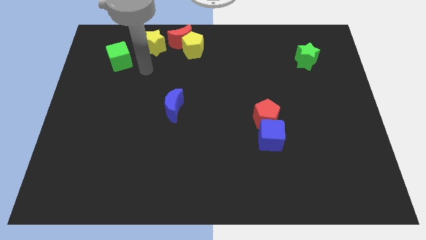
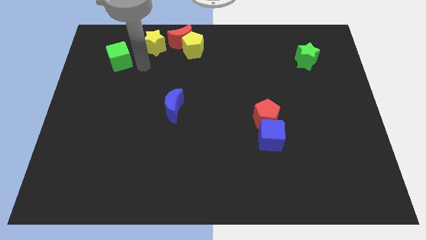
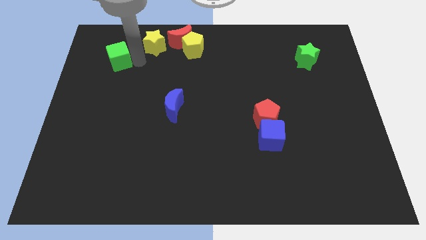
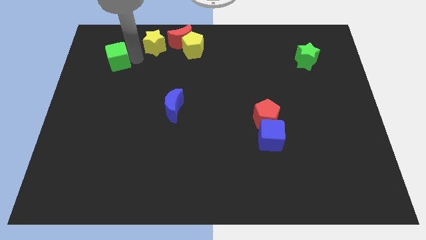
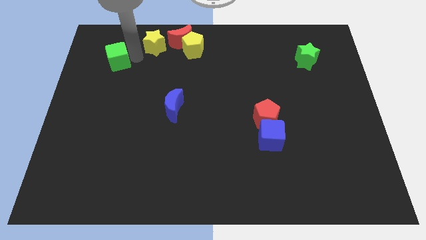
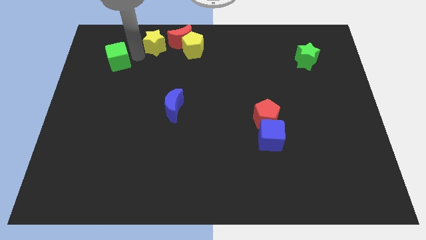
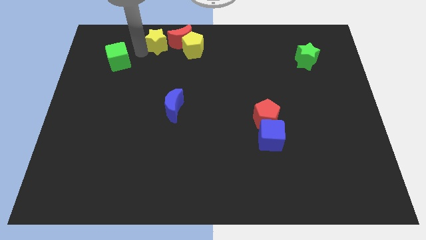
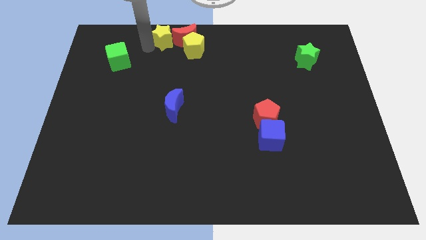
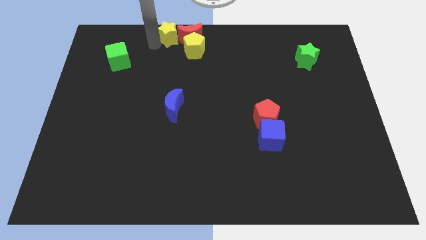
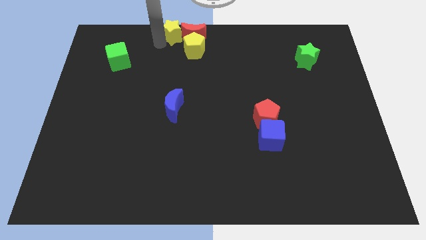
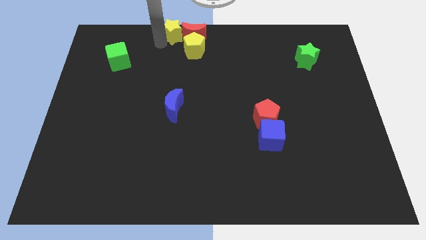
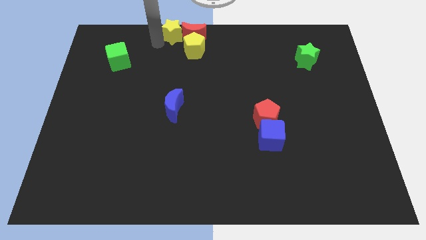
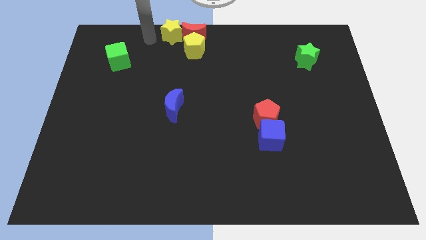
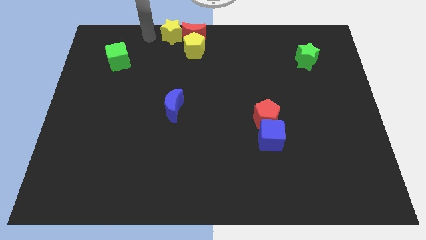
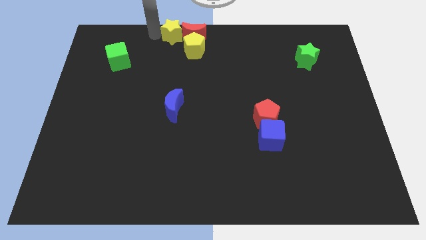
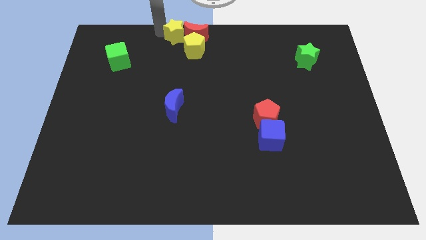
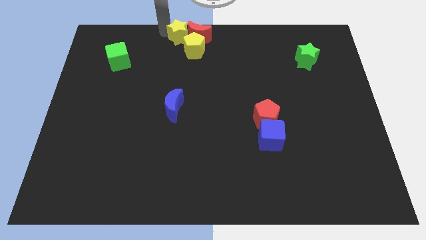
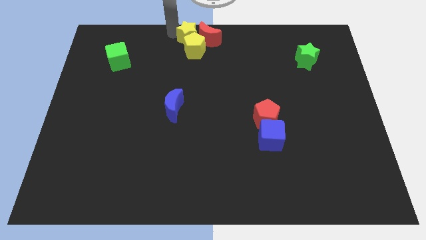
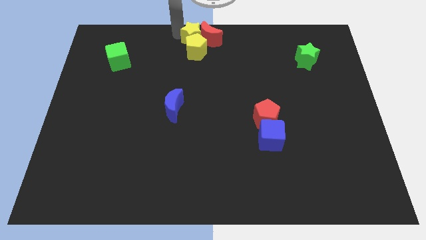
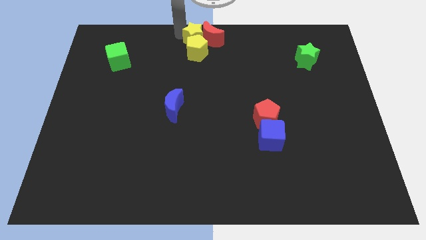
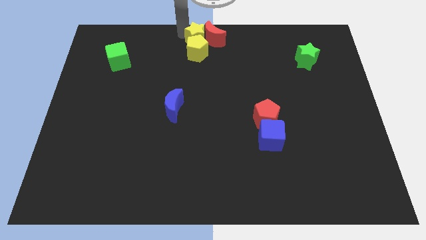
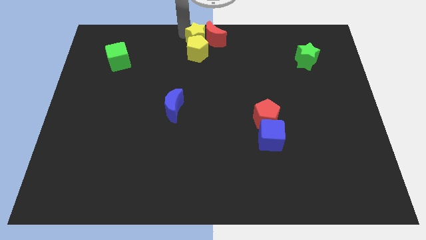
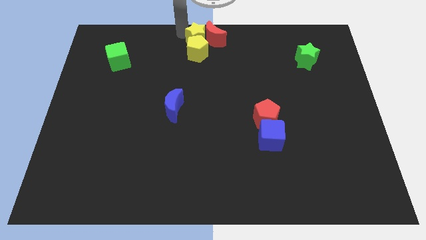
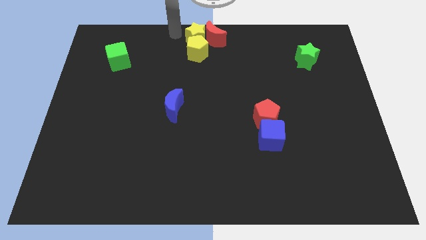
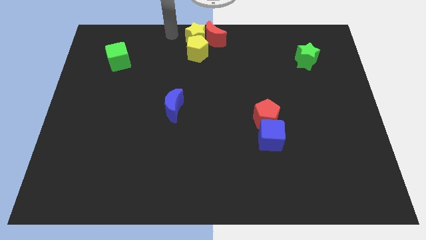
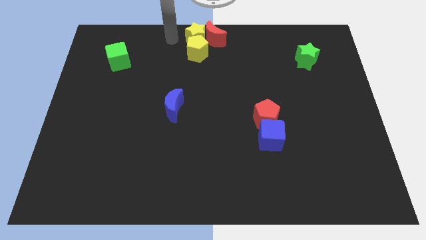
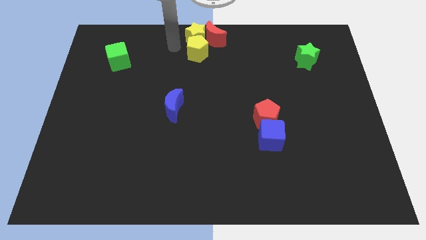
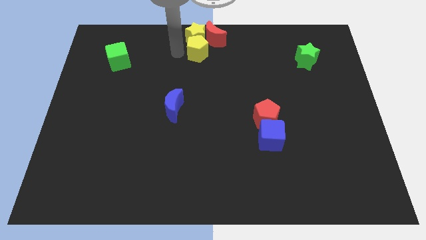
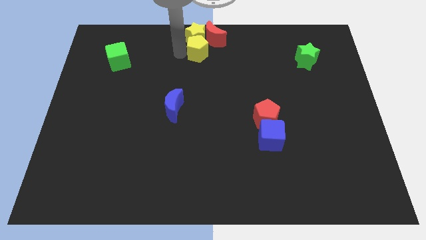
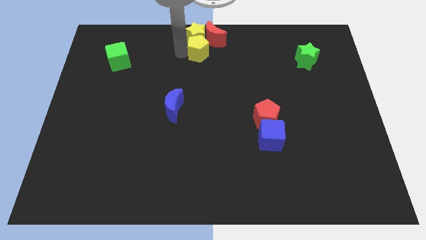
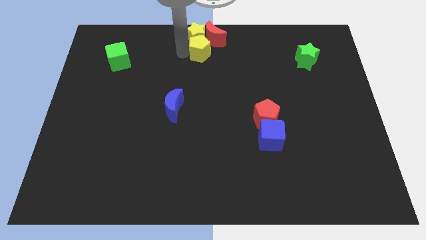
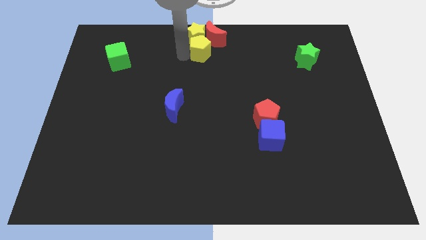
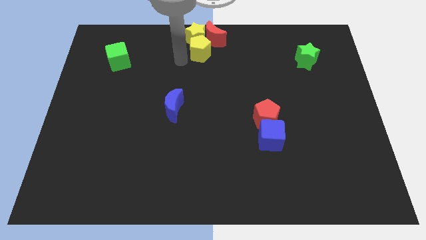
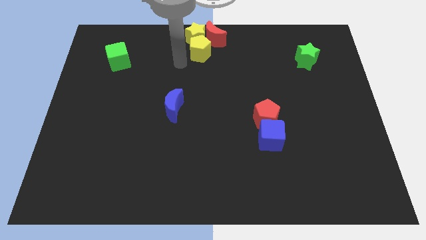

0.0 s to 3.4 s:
place yellow blocks and the red crecent at the top center

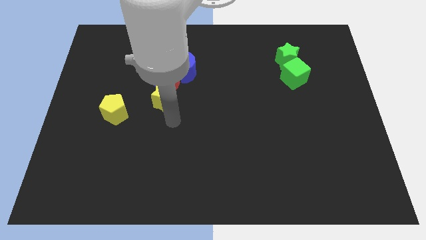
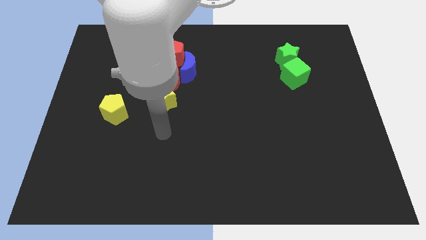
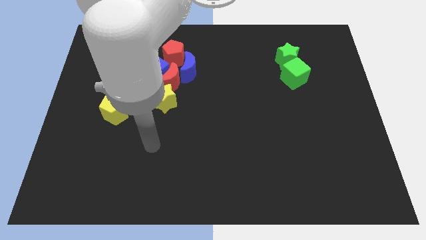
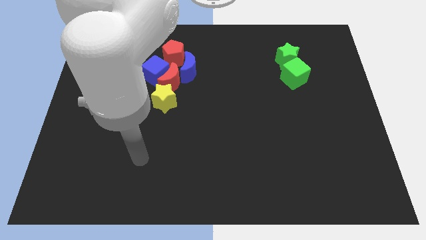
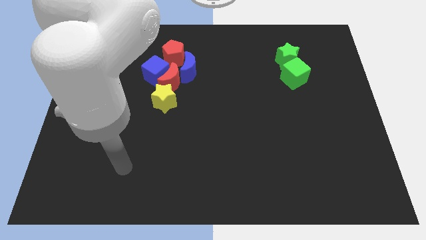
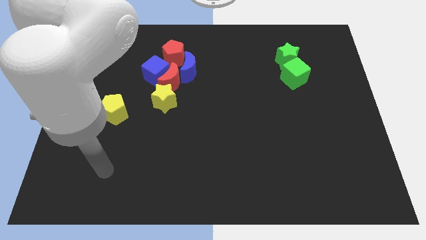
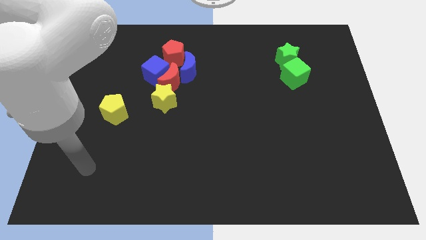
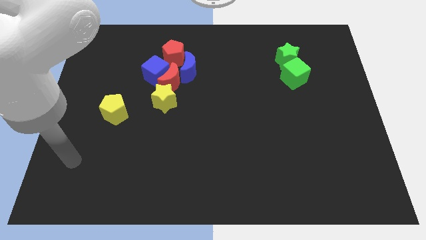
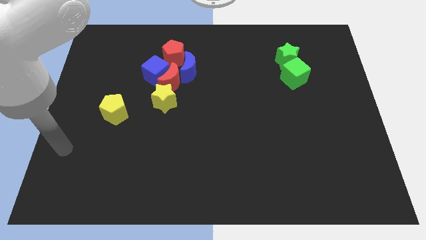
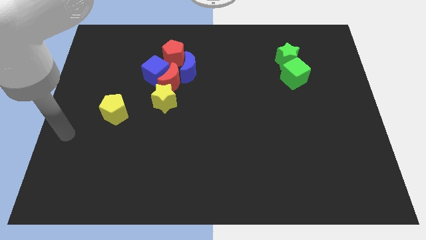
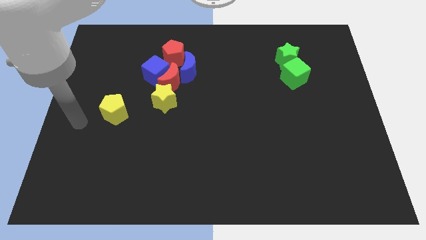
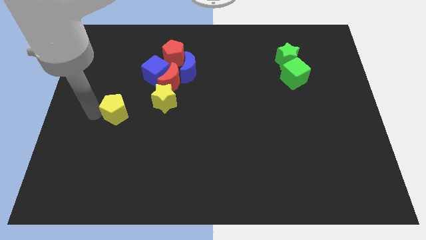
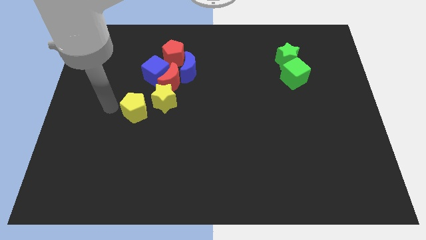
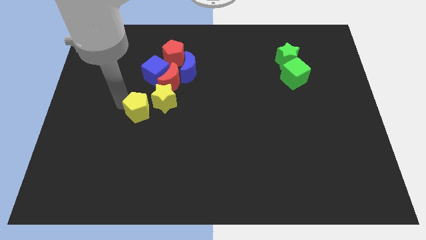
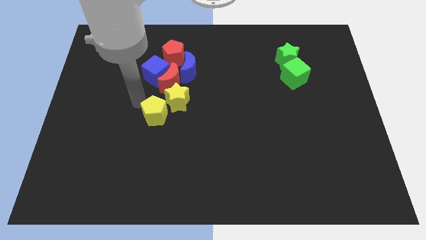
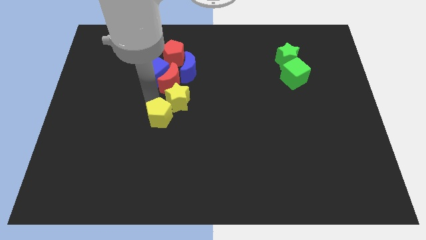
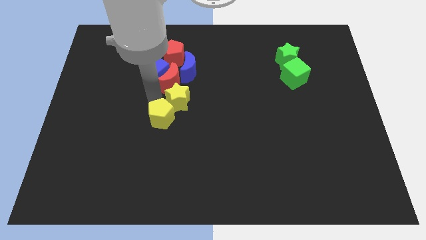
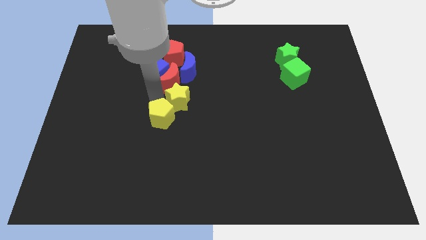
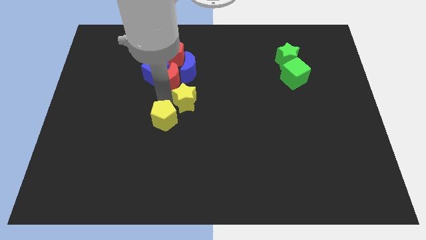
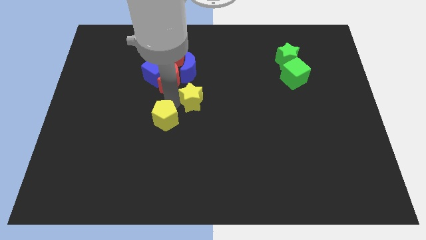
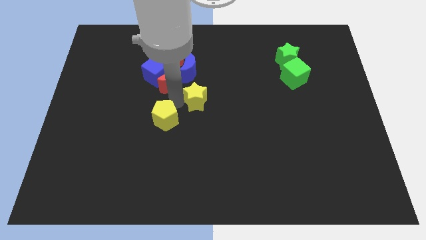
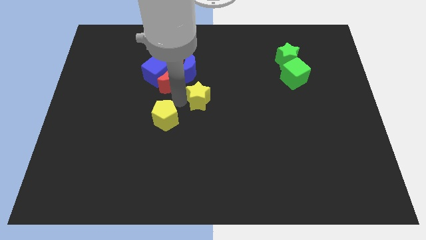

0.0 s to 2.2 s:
move yellow pentagon towards yellow star

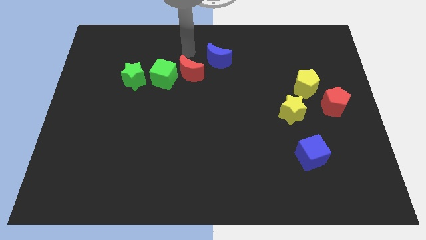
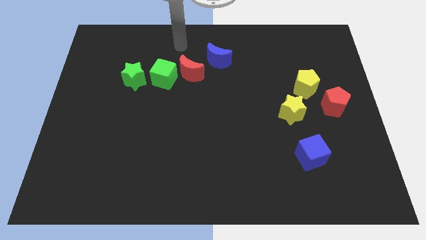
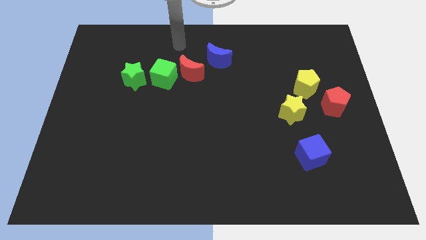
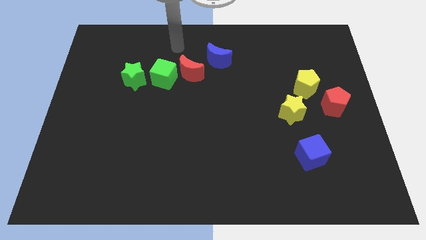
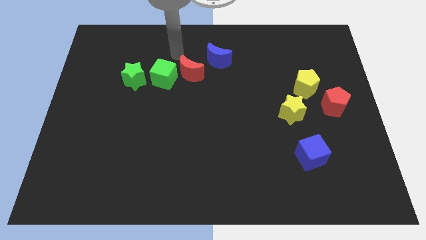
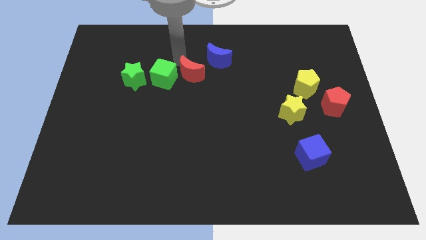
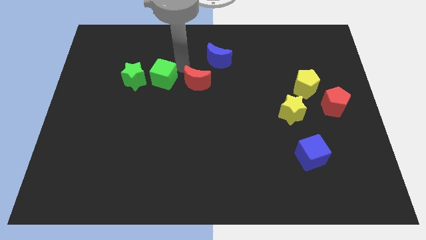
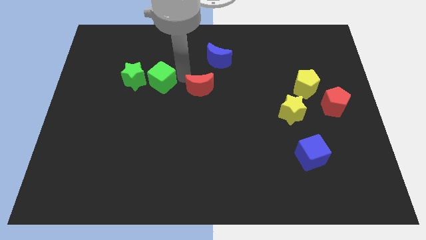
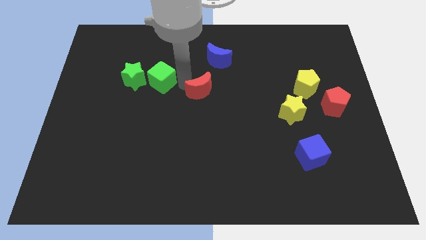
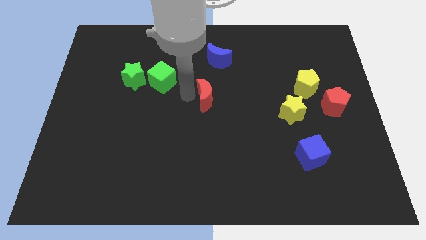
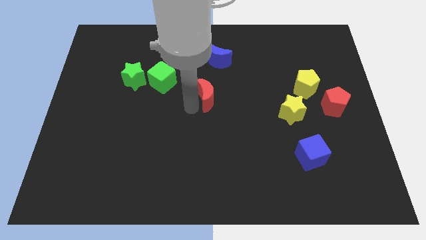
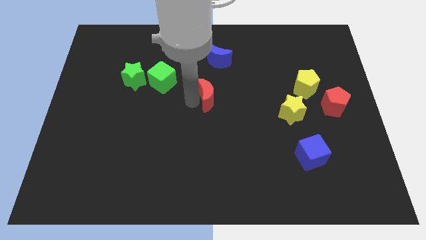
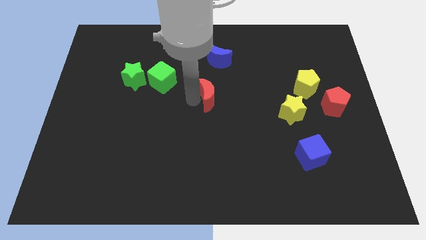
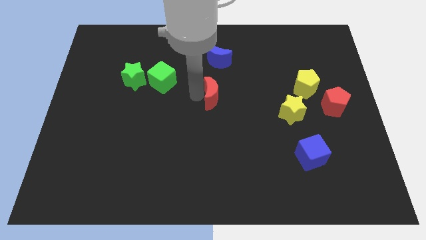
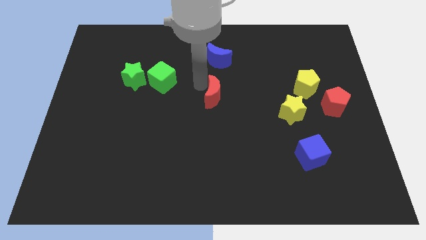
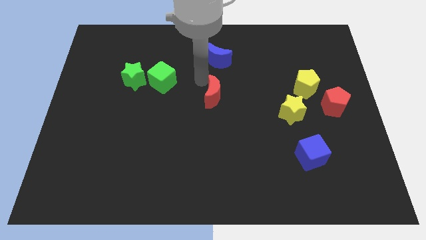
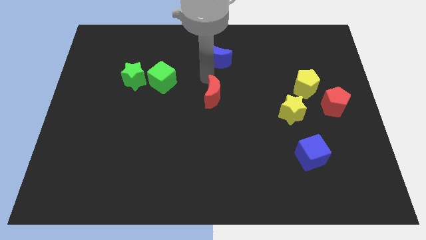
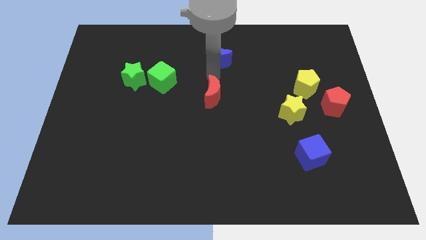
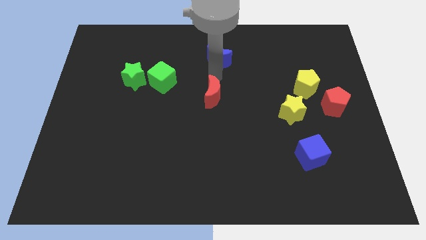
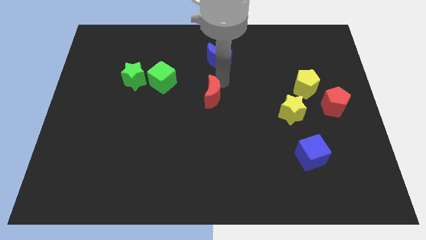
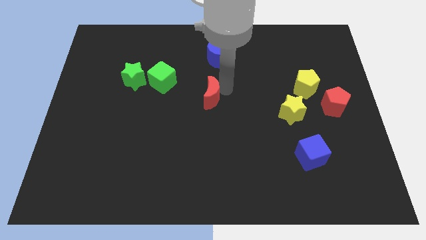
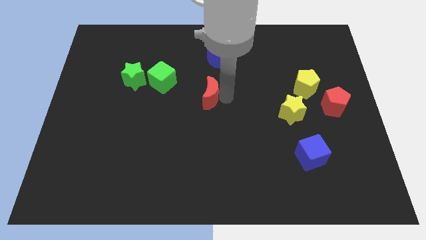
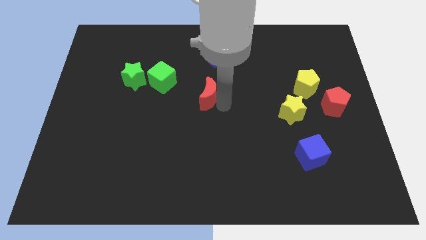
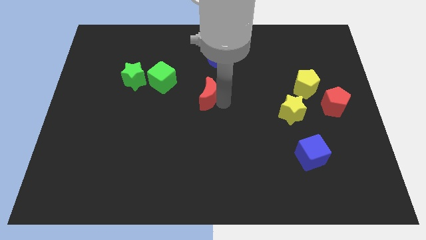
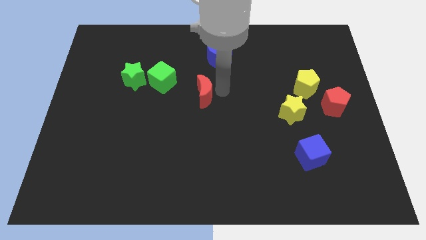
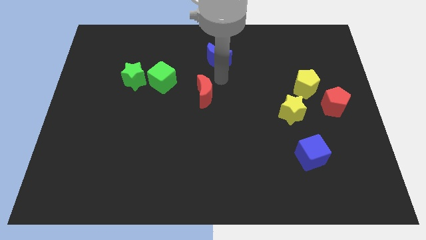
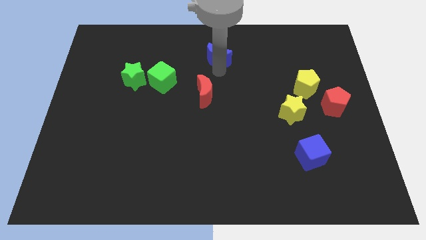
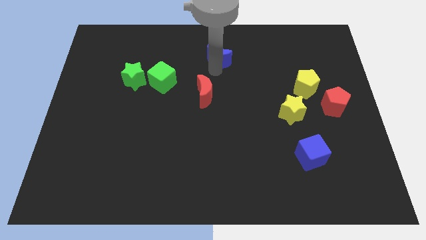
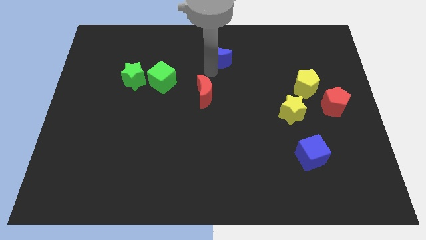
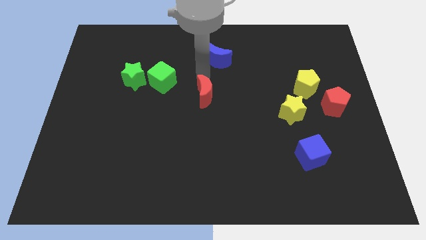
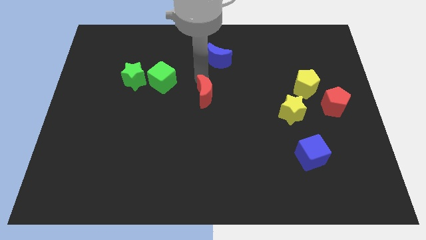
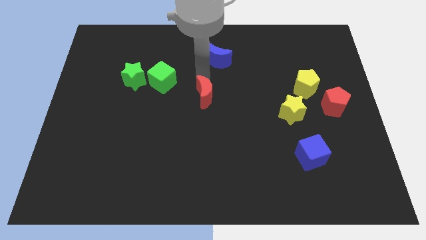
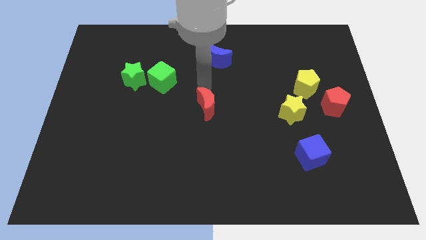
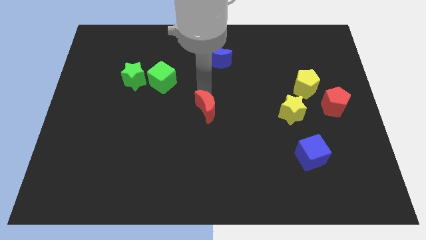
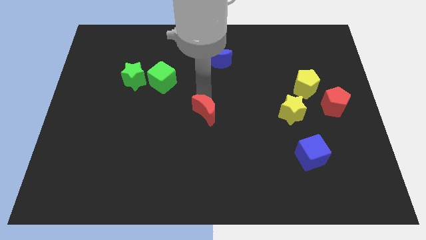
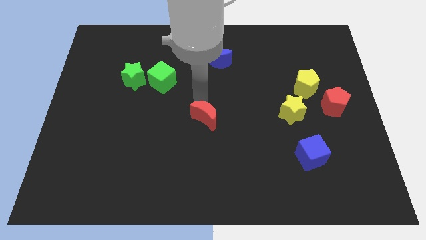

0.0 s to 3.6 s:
place the red moon diagonally bottom right to the green cube
